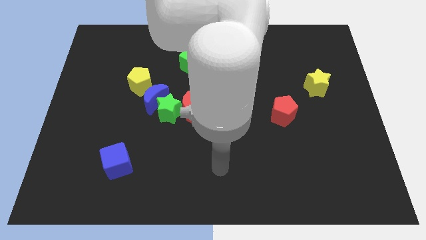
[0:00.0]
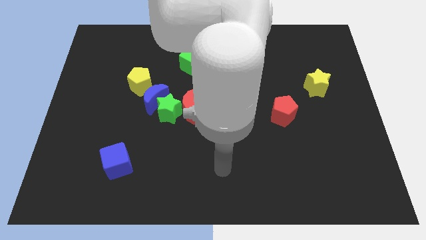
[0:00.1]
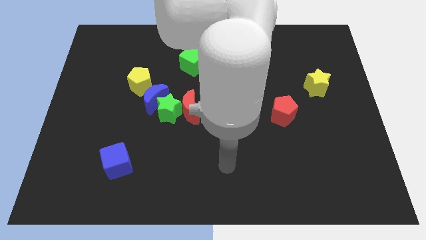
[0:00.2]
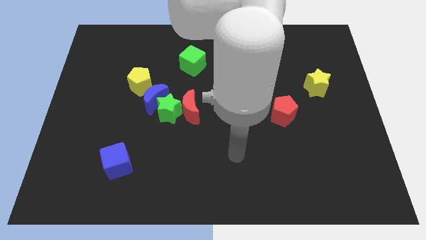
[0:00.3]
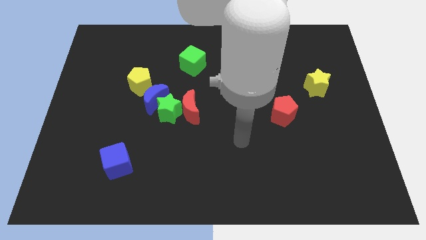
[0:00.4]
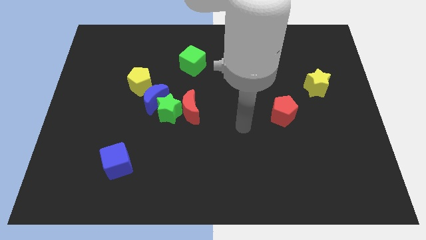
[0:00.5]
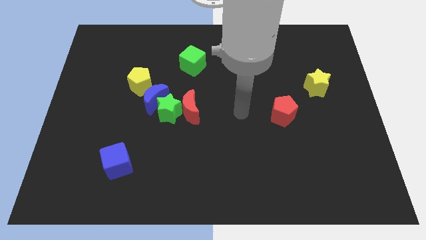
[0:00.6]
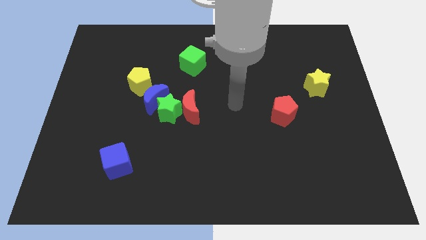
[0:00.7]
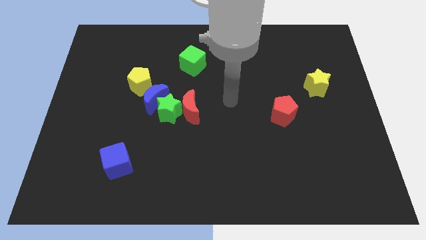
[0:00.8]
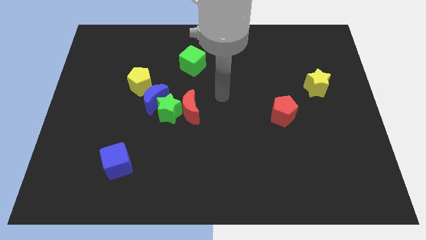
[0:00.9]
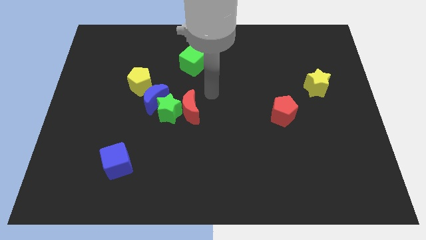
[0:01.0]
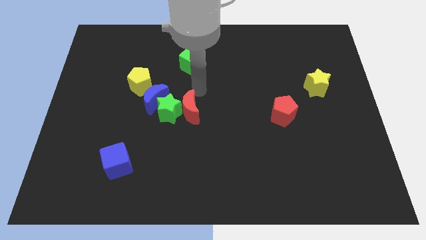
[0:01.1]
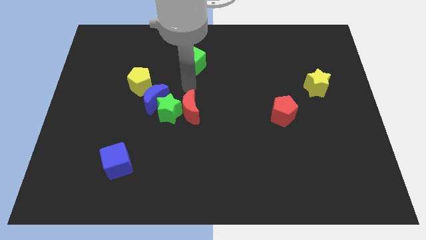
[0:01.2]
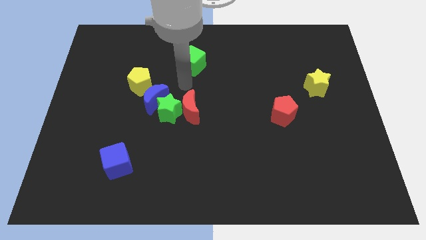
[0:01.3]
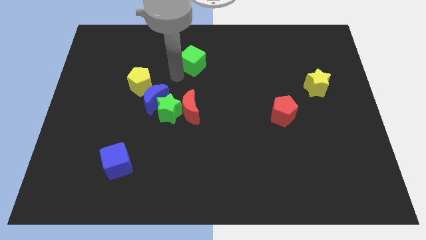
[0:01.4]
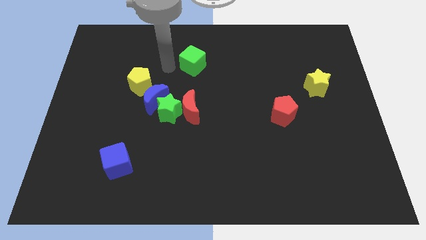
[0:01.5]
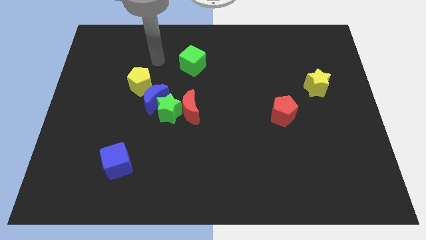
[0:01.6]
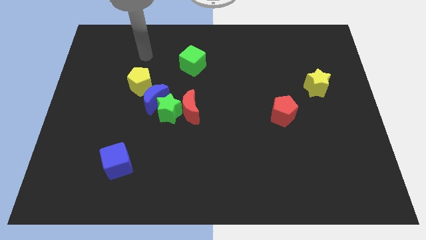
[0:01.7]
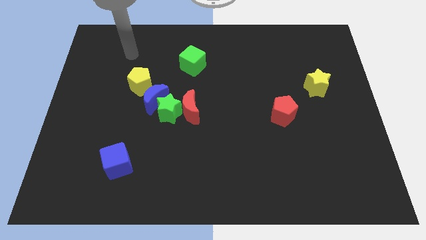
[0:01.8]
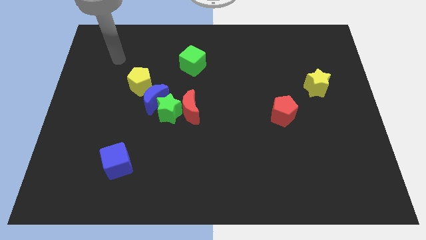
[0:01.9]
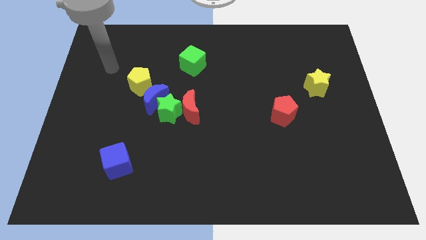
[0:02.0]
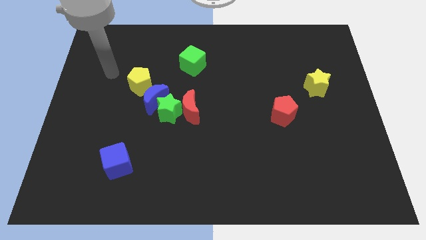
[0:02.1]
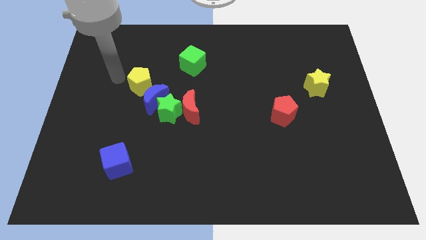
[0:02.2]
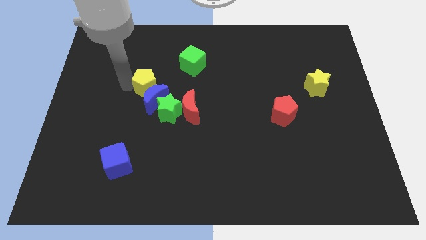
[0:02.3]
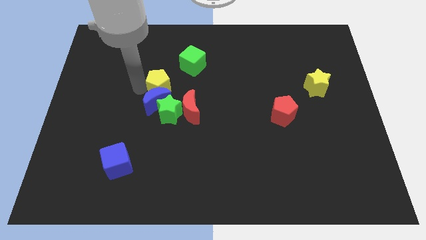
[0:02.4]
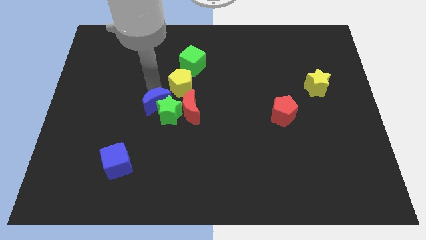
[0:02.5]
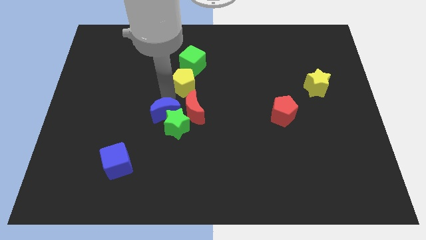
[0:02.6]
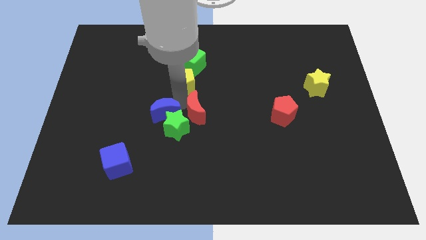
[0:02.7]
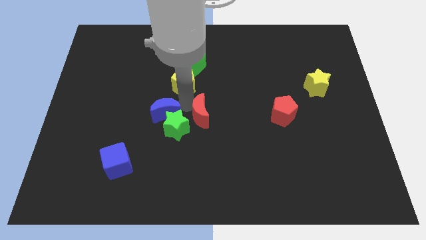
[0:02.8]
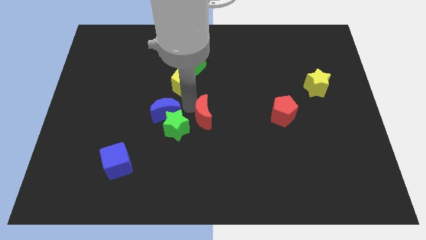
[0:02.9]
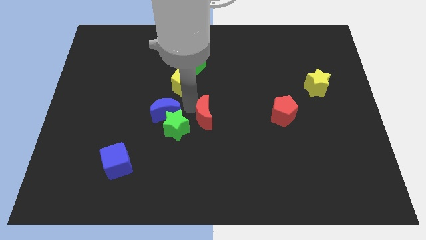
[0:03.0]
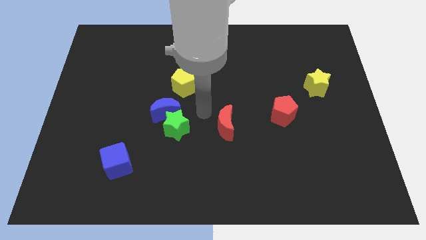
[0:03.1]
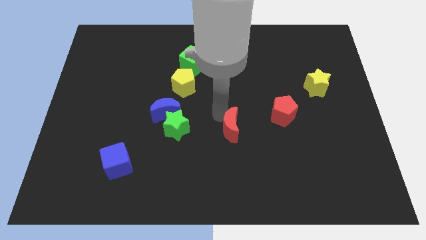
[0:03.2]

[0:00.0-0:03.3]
move the red moon away from the green star

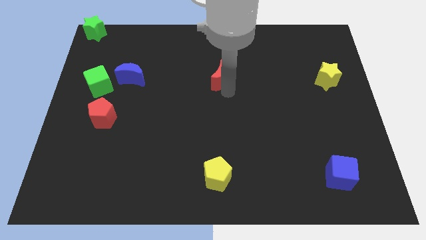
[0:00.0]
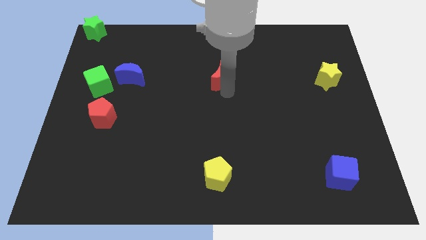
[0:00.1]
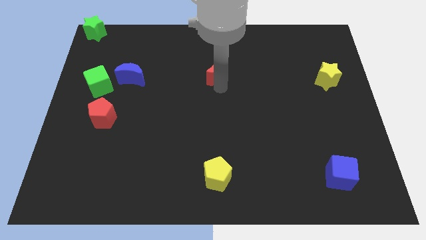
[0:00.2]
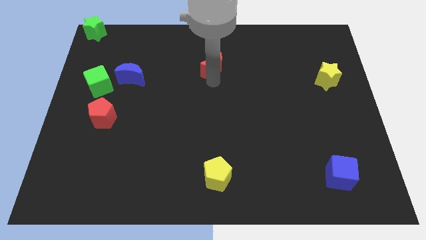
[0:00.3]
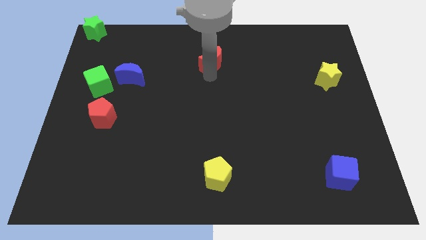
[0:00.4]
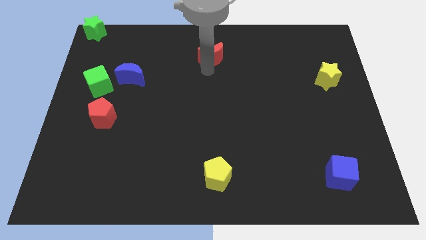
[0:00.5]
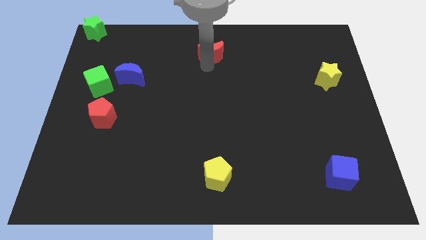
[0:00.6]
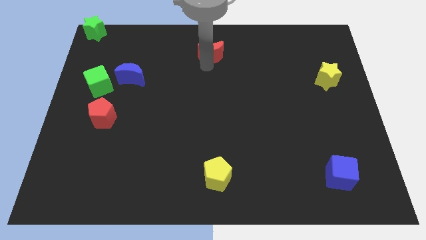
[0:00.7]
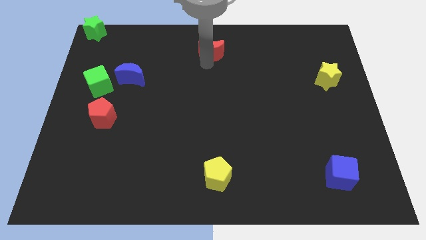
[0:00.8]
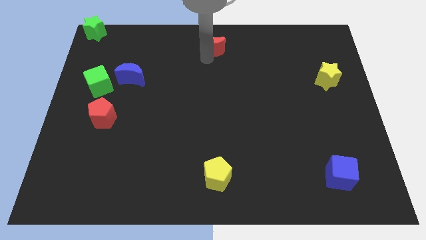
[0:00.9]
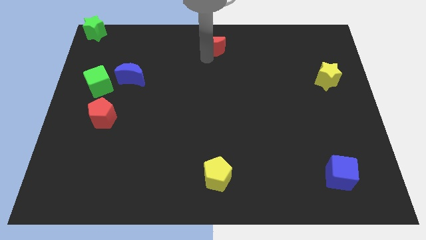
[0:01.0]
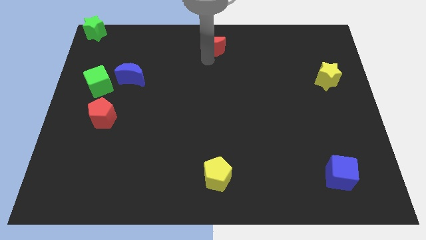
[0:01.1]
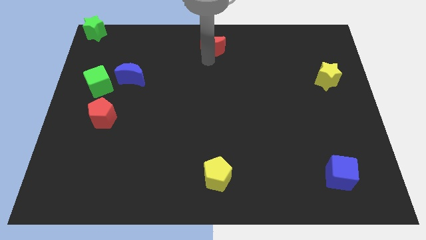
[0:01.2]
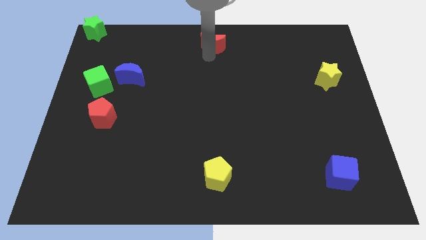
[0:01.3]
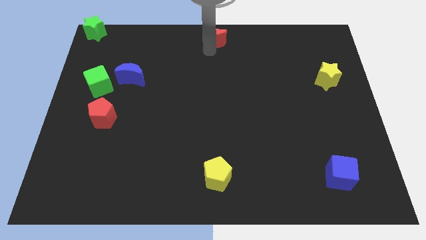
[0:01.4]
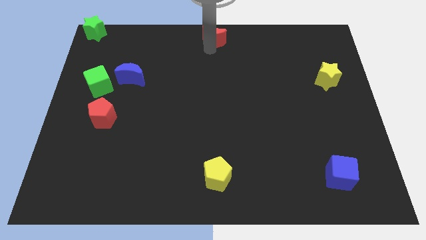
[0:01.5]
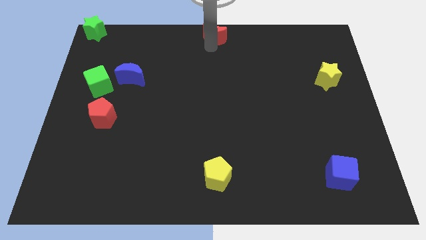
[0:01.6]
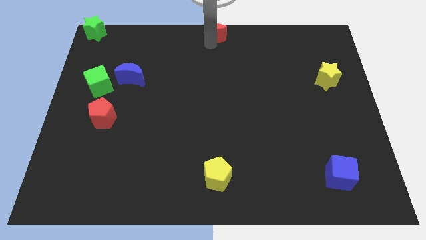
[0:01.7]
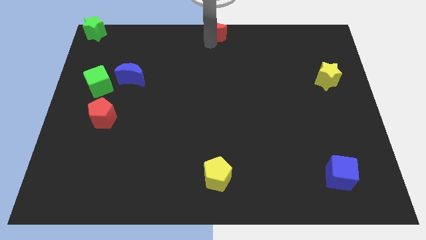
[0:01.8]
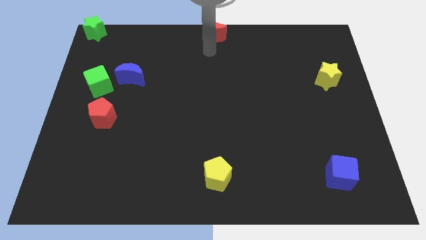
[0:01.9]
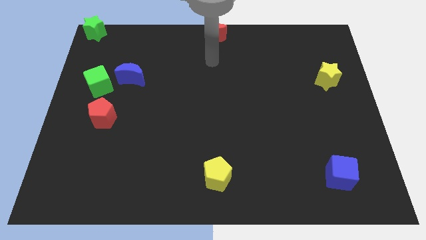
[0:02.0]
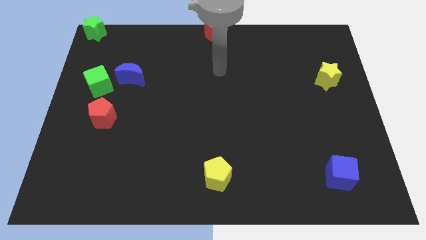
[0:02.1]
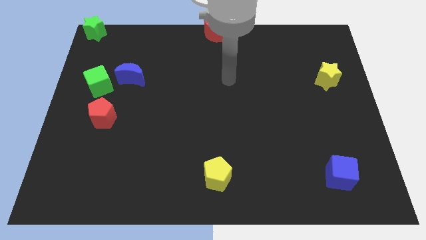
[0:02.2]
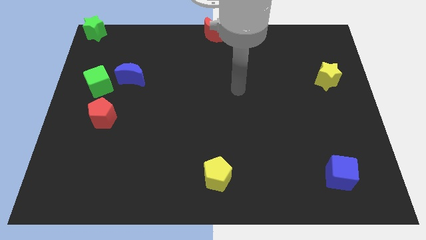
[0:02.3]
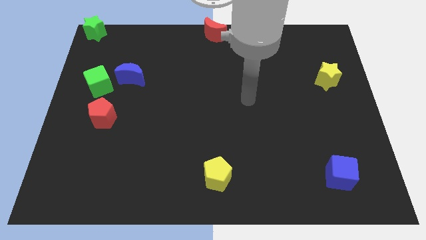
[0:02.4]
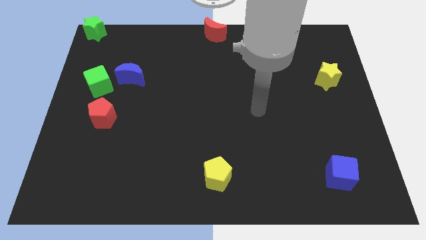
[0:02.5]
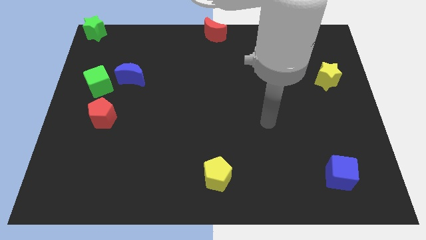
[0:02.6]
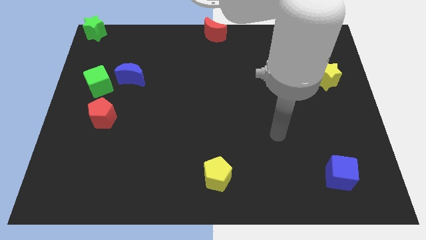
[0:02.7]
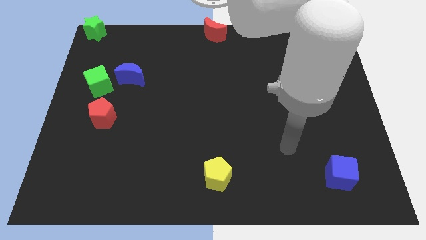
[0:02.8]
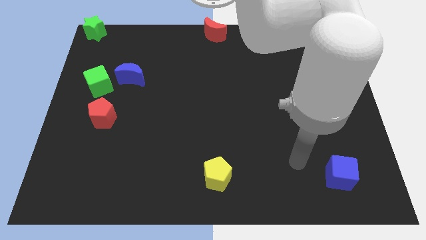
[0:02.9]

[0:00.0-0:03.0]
move the red crescent to the top center of the board

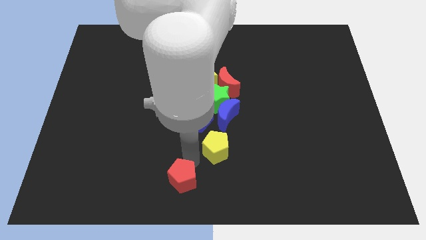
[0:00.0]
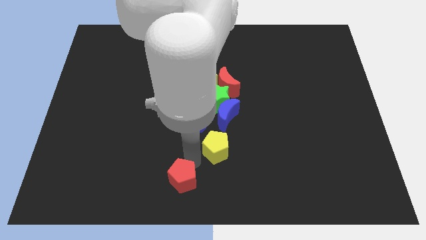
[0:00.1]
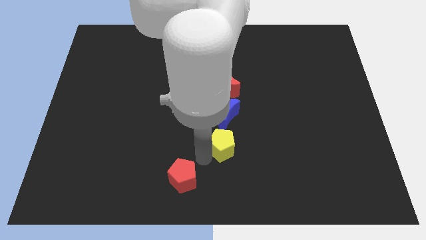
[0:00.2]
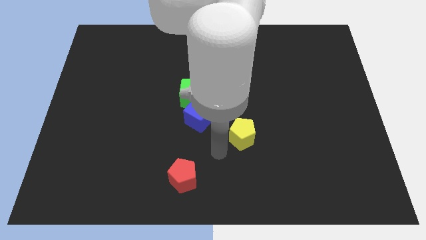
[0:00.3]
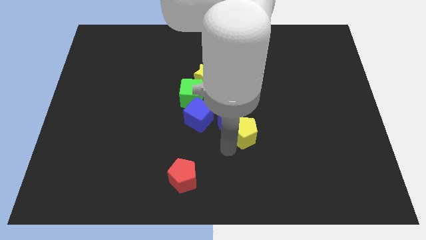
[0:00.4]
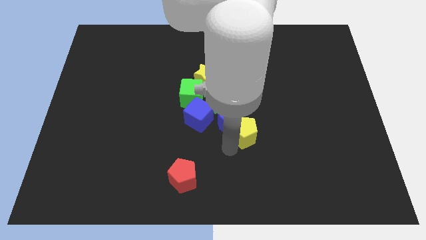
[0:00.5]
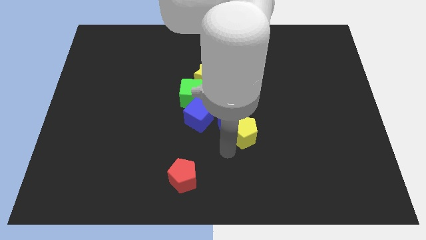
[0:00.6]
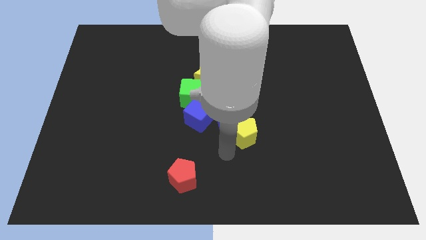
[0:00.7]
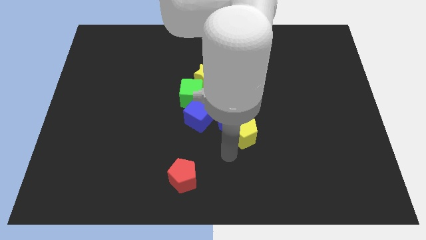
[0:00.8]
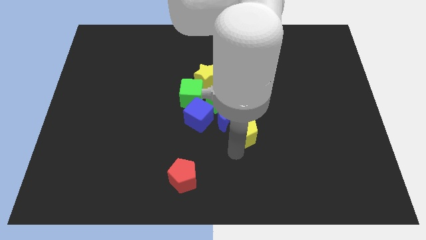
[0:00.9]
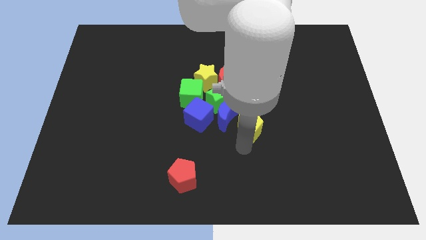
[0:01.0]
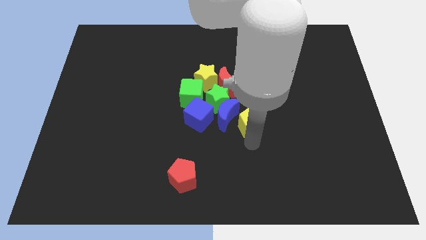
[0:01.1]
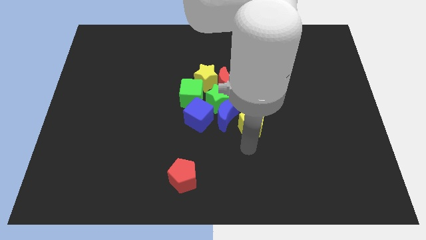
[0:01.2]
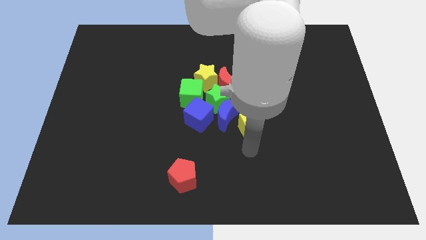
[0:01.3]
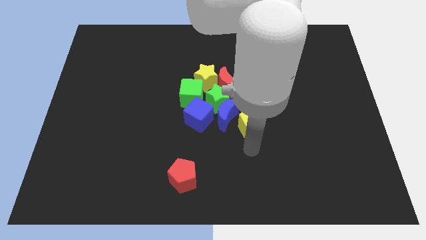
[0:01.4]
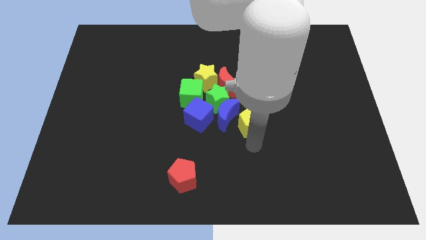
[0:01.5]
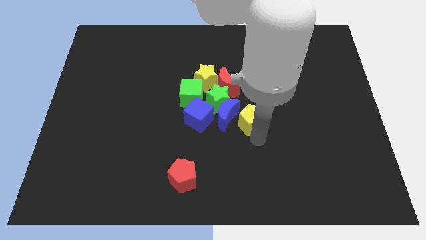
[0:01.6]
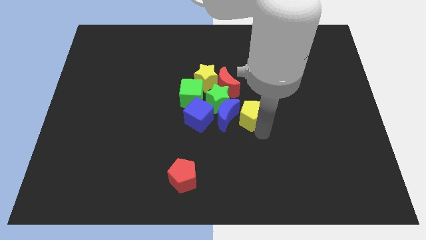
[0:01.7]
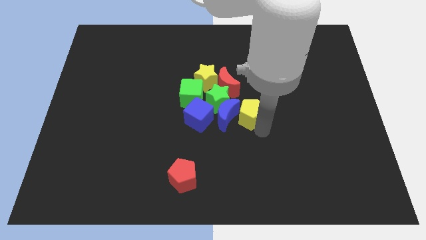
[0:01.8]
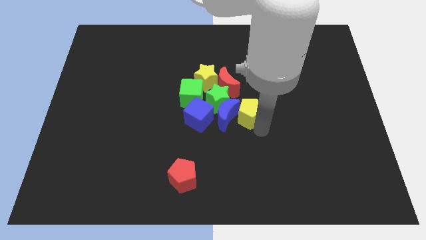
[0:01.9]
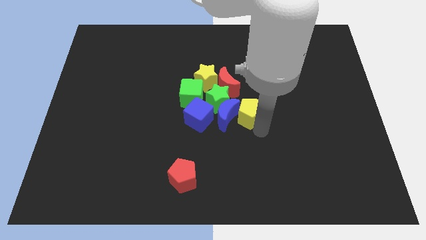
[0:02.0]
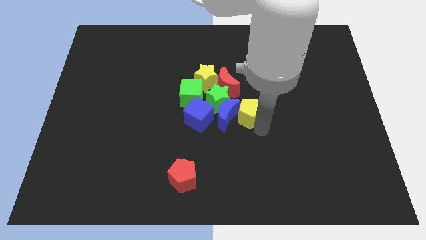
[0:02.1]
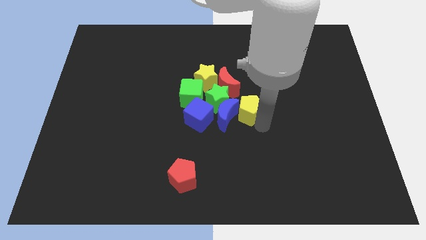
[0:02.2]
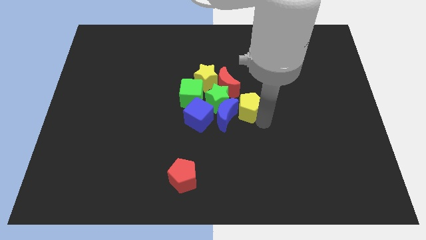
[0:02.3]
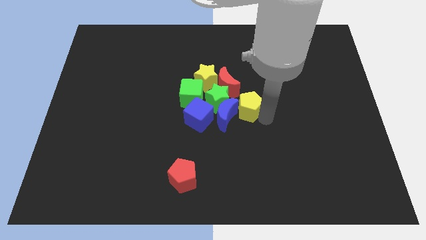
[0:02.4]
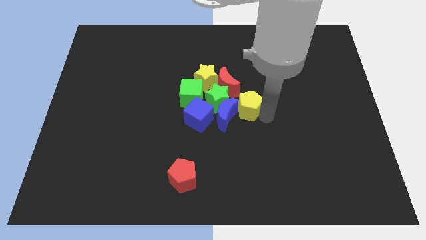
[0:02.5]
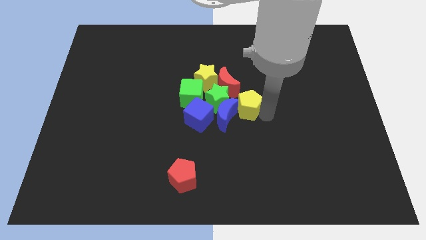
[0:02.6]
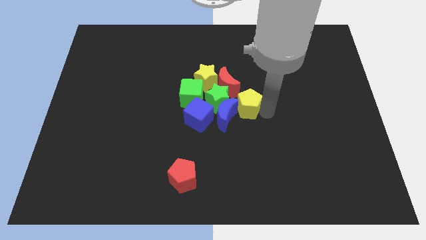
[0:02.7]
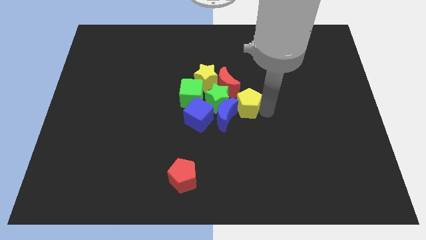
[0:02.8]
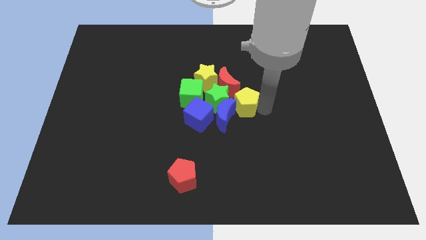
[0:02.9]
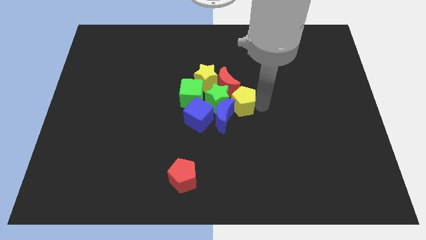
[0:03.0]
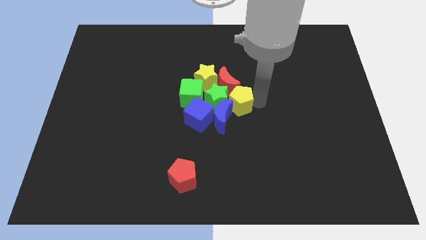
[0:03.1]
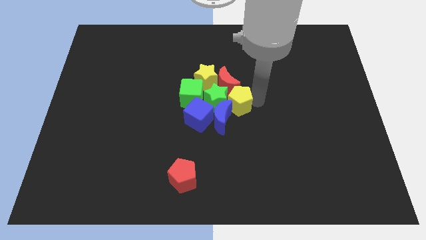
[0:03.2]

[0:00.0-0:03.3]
push the yellow pentagon towards the group of objects
